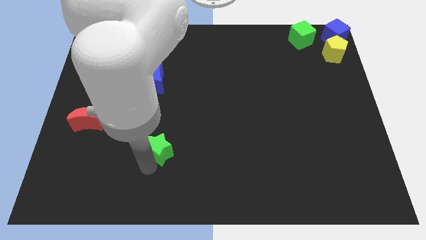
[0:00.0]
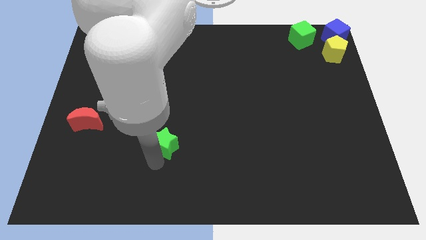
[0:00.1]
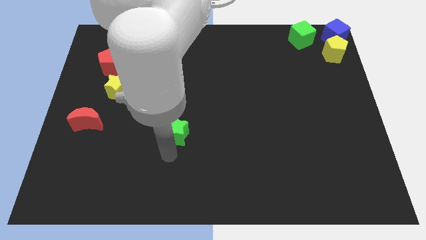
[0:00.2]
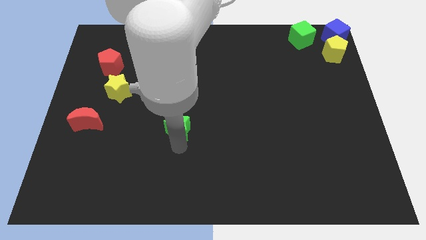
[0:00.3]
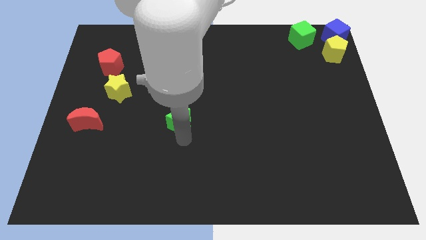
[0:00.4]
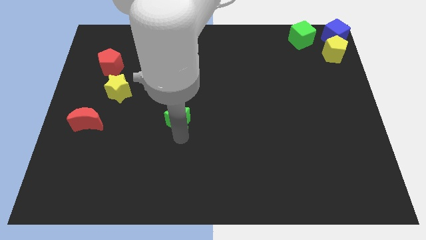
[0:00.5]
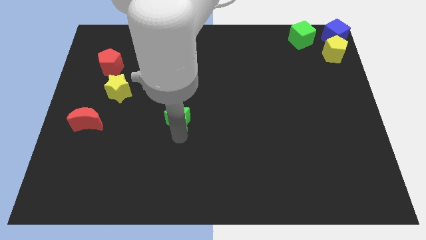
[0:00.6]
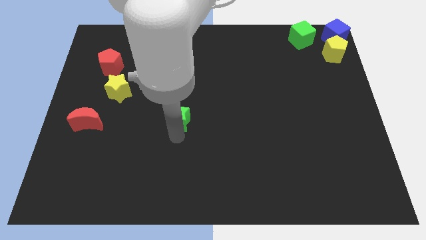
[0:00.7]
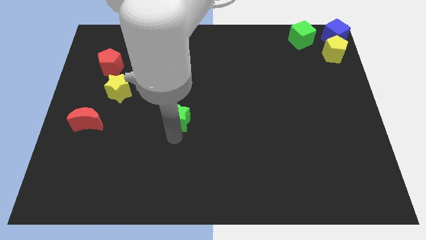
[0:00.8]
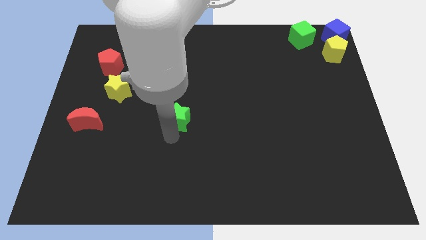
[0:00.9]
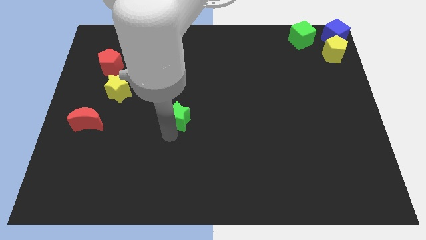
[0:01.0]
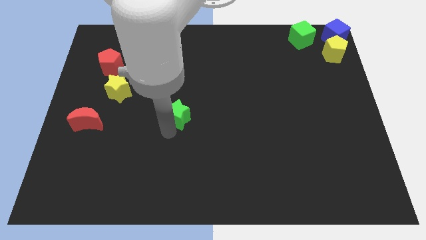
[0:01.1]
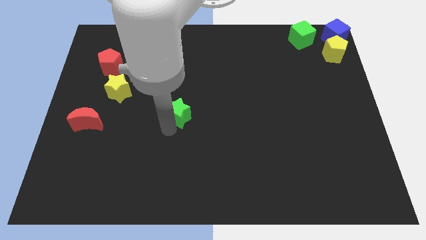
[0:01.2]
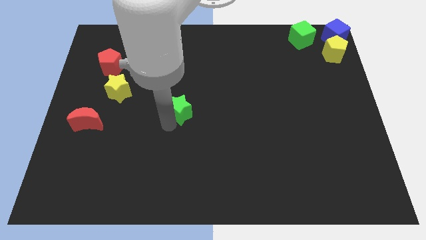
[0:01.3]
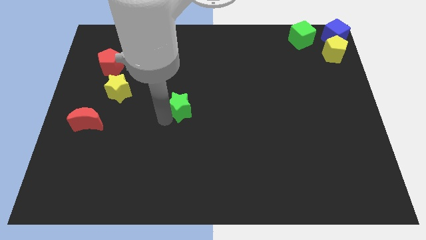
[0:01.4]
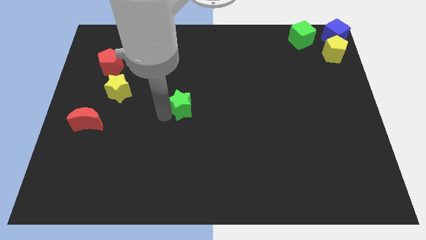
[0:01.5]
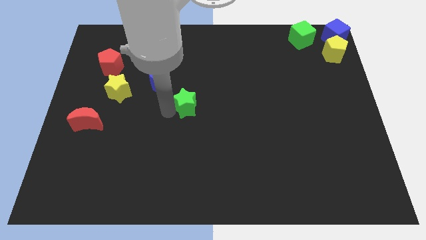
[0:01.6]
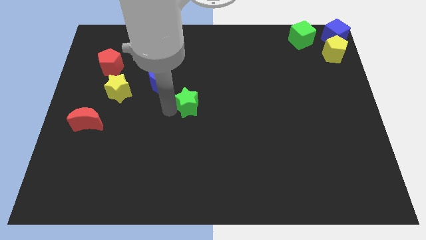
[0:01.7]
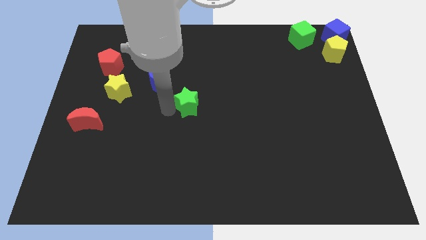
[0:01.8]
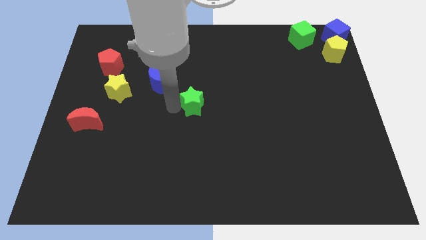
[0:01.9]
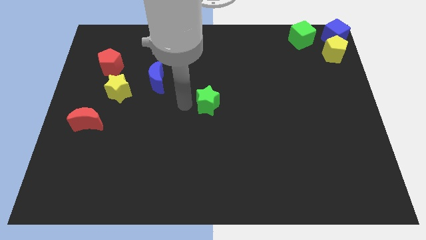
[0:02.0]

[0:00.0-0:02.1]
push the green star to the center of the board

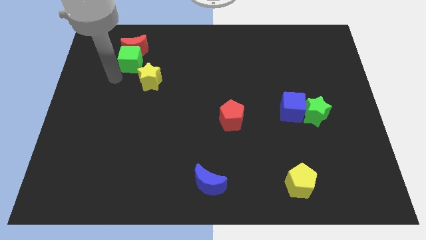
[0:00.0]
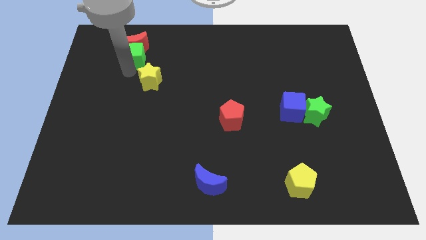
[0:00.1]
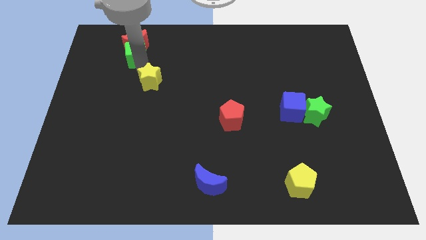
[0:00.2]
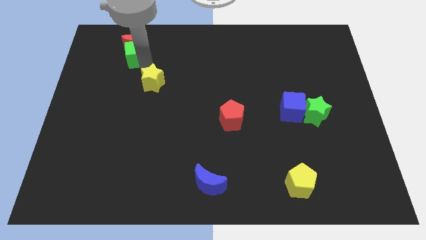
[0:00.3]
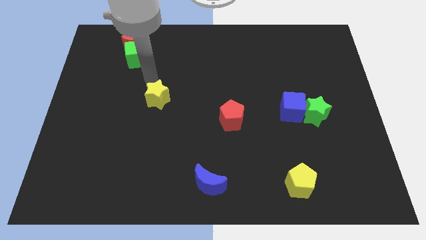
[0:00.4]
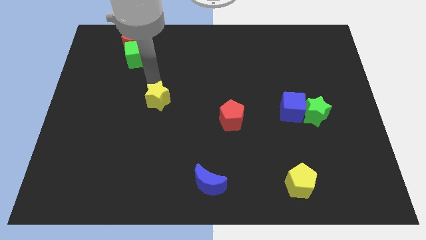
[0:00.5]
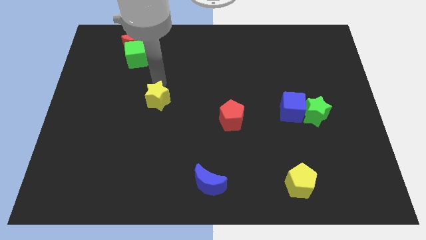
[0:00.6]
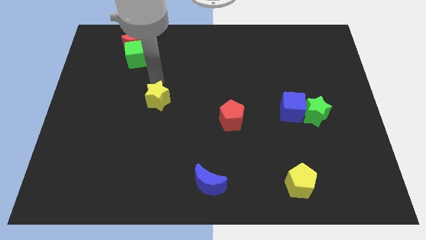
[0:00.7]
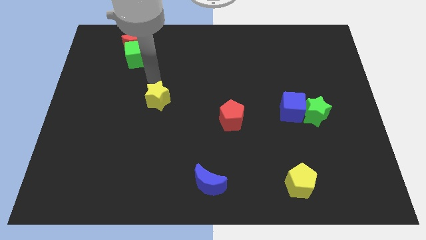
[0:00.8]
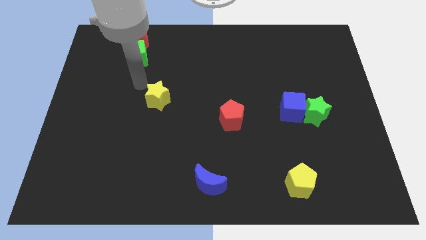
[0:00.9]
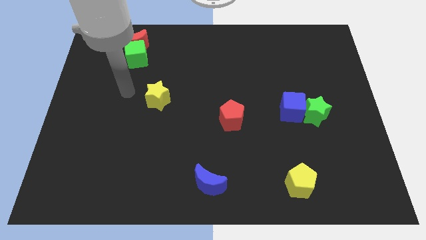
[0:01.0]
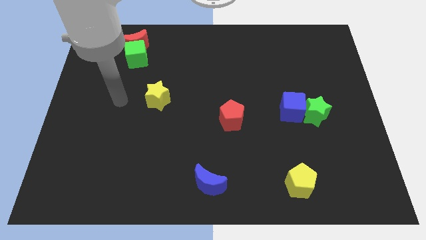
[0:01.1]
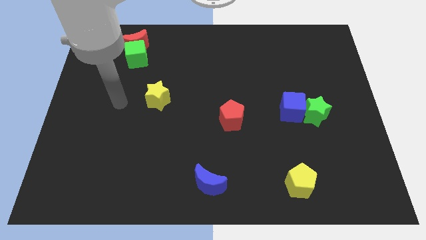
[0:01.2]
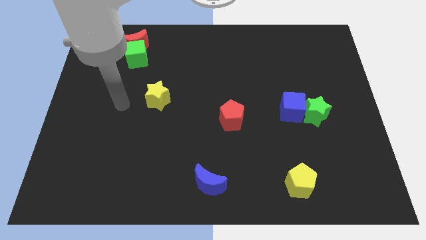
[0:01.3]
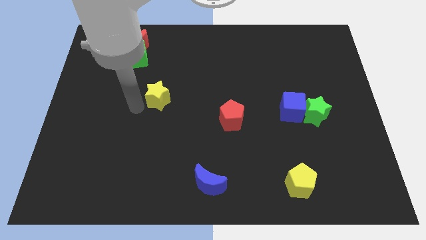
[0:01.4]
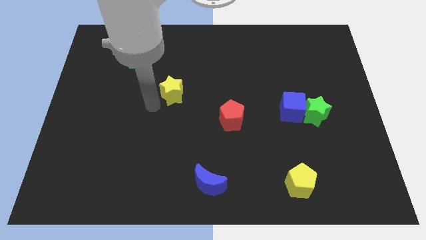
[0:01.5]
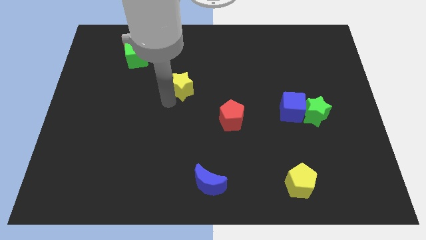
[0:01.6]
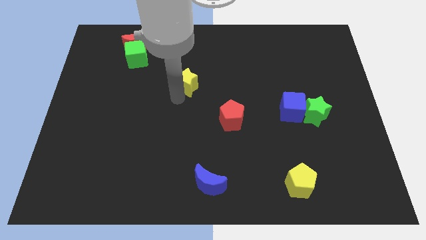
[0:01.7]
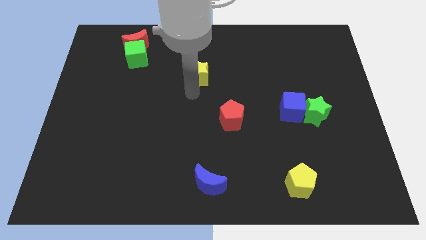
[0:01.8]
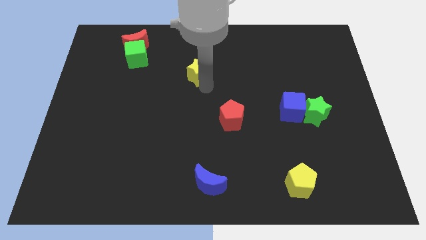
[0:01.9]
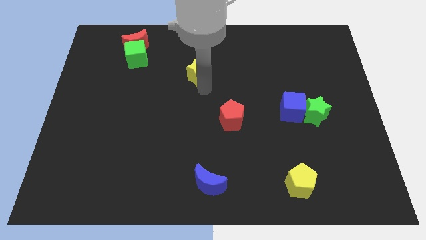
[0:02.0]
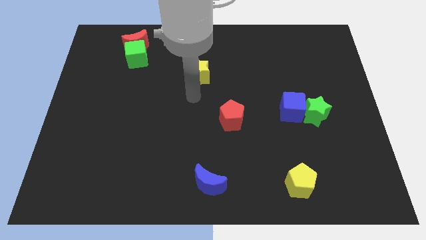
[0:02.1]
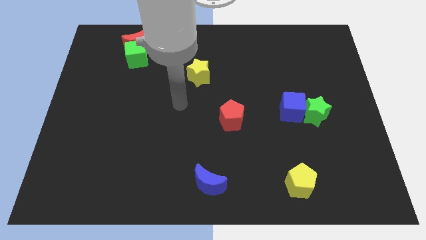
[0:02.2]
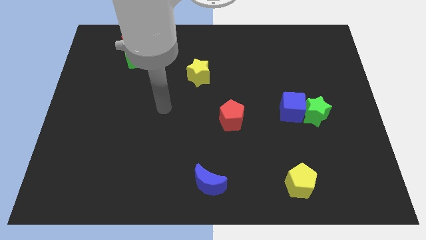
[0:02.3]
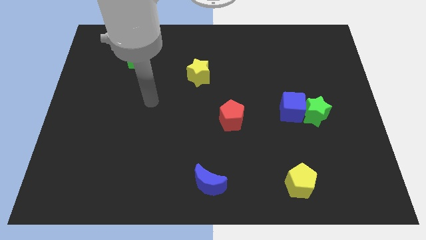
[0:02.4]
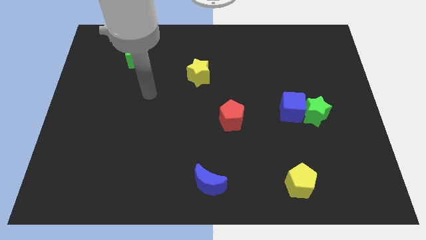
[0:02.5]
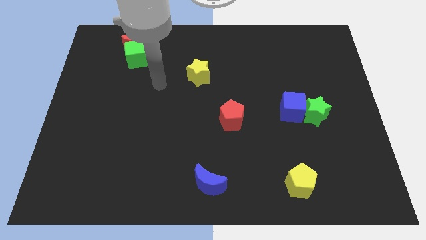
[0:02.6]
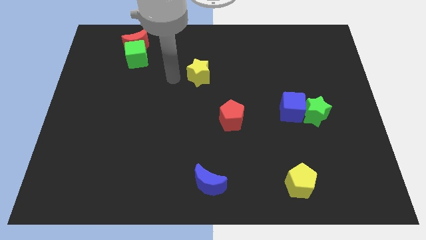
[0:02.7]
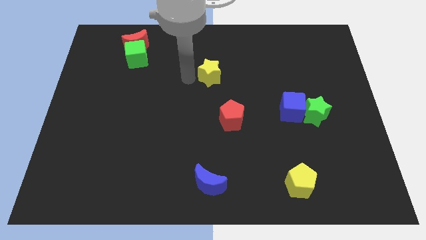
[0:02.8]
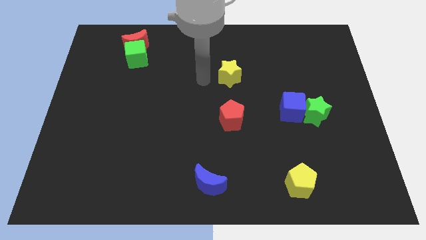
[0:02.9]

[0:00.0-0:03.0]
put the yellow star above the red pentagon

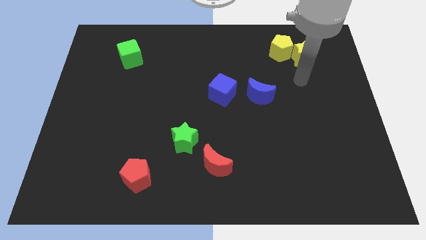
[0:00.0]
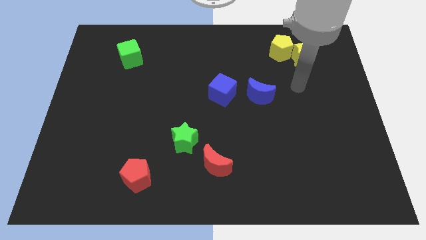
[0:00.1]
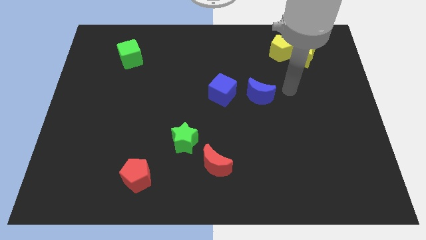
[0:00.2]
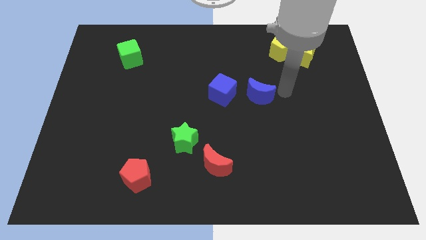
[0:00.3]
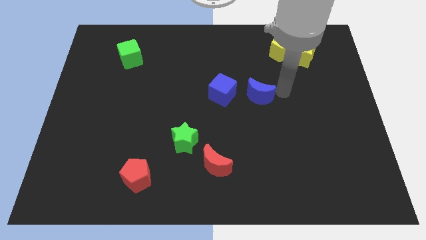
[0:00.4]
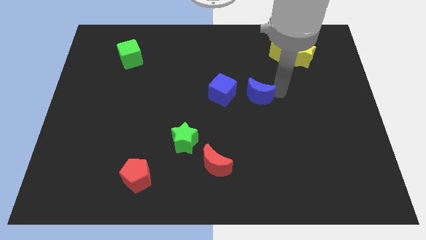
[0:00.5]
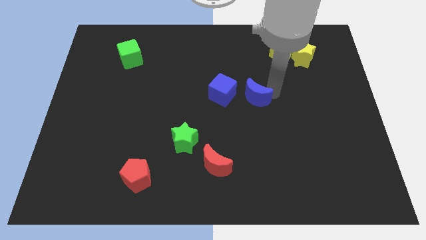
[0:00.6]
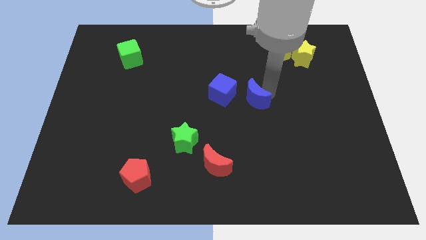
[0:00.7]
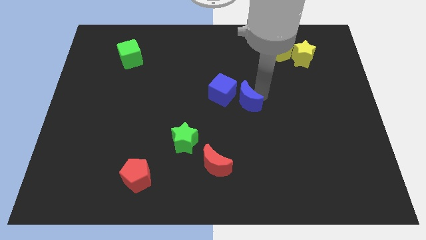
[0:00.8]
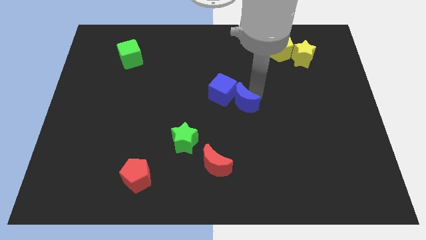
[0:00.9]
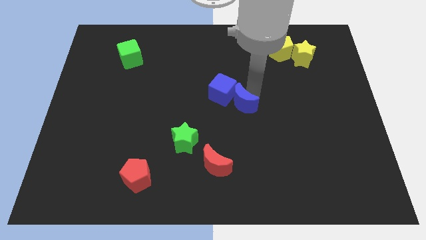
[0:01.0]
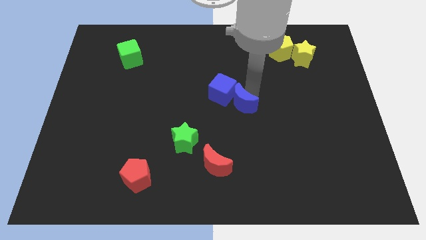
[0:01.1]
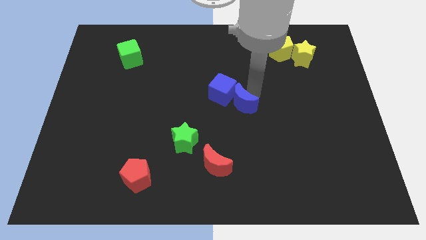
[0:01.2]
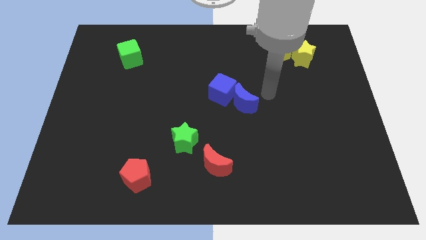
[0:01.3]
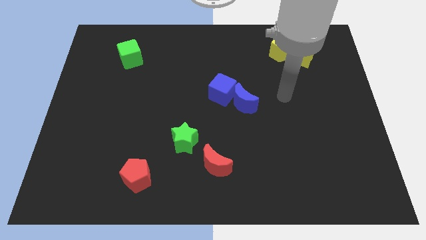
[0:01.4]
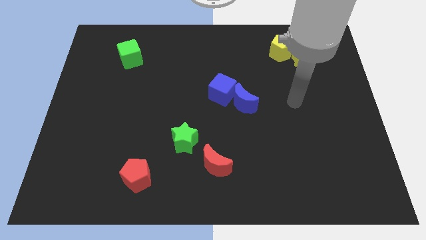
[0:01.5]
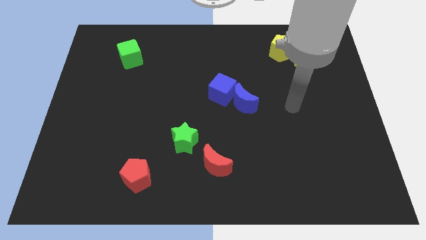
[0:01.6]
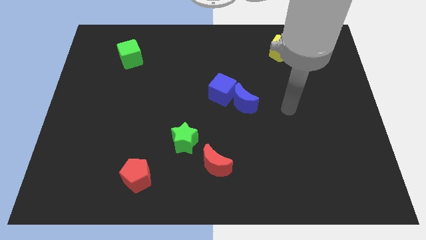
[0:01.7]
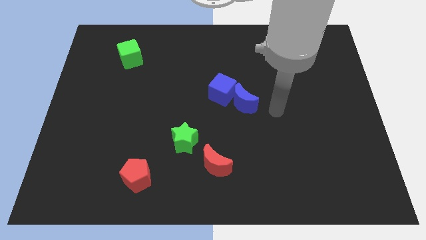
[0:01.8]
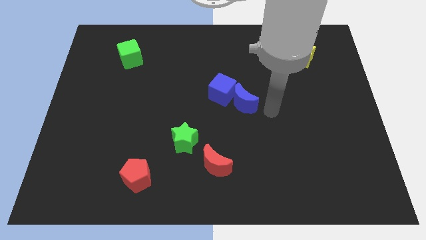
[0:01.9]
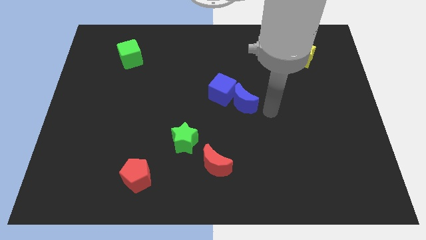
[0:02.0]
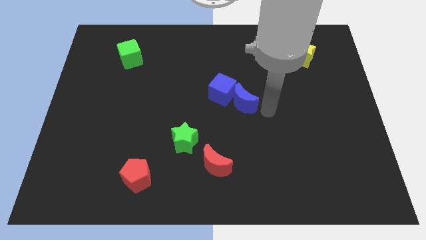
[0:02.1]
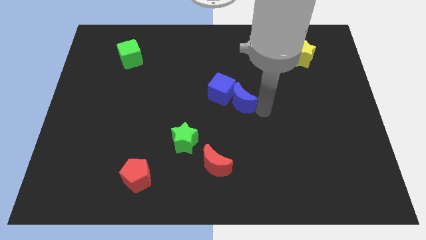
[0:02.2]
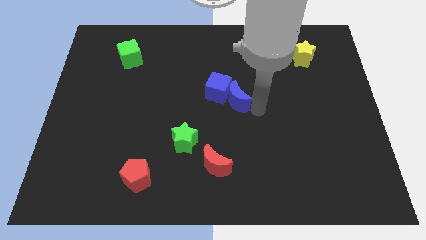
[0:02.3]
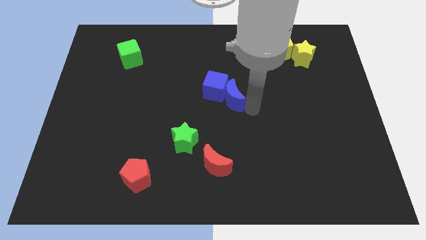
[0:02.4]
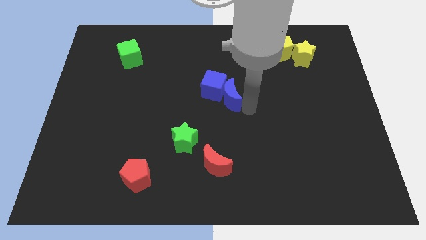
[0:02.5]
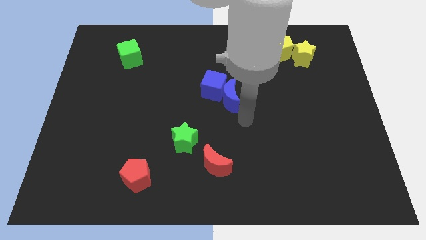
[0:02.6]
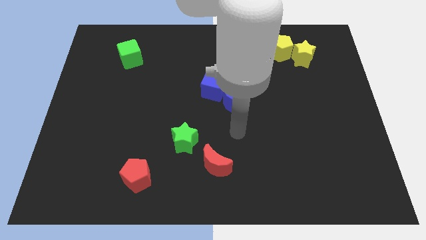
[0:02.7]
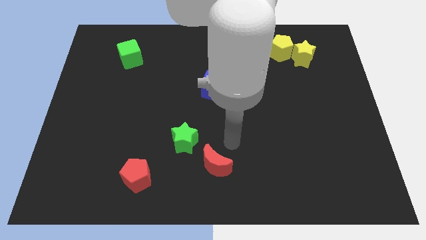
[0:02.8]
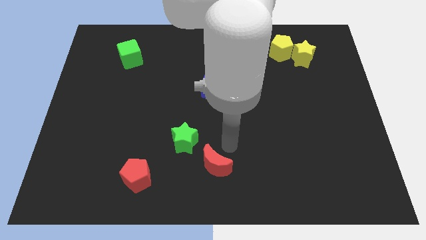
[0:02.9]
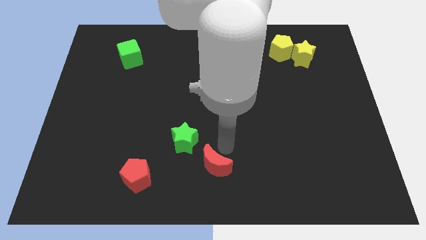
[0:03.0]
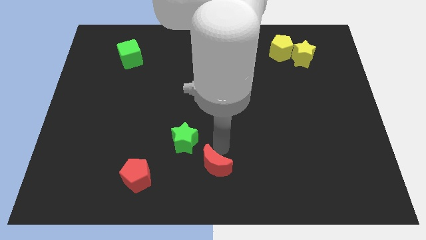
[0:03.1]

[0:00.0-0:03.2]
push the blue moon into the blue cube

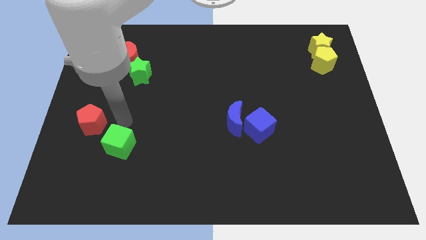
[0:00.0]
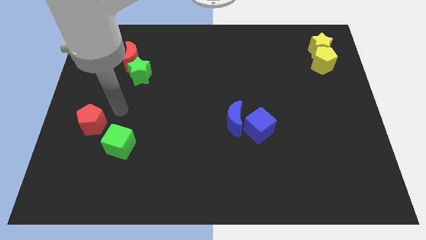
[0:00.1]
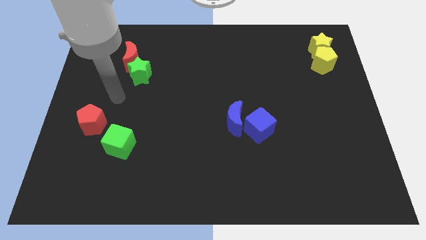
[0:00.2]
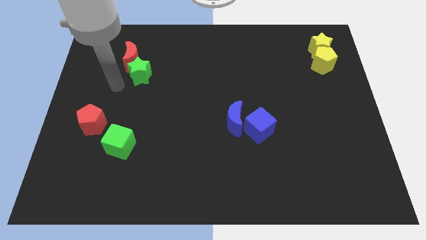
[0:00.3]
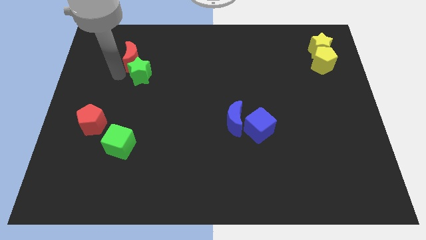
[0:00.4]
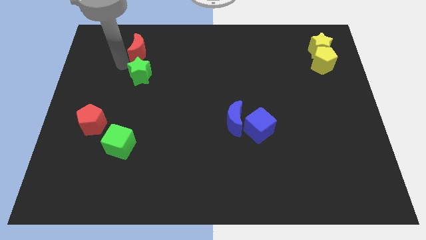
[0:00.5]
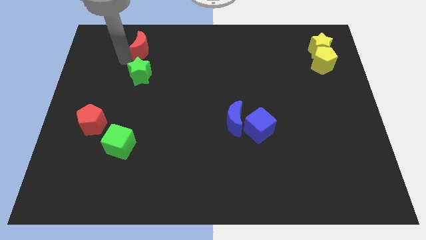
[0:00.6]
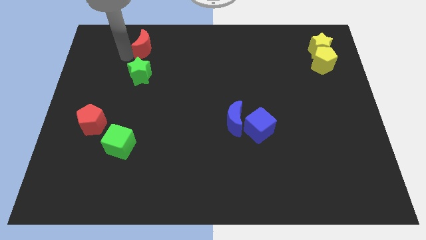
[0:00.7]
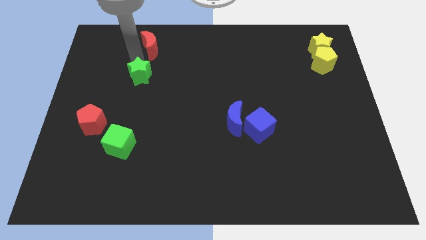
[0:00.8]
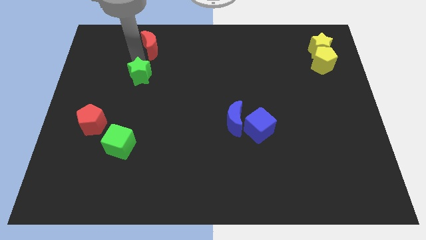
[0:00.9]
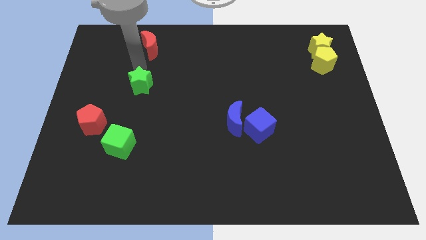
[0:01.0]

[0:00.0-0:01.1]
place red moon to the top of green star
